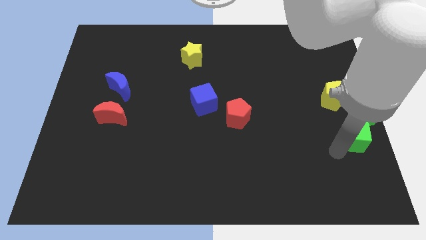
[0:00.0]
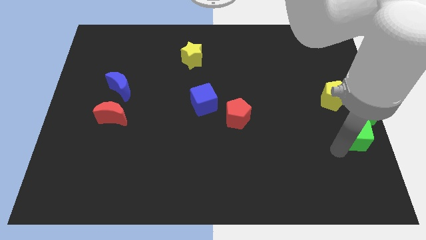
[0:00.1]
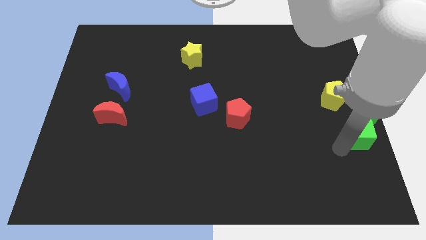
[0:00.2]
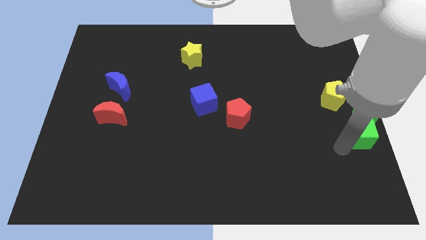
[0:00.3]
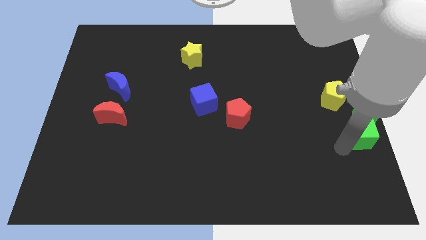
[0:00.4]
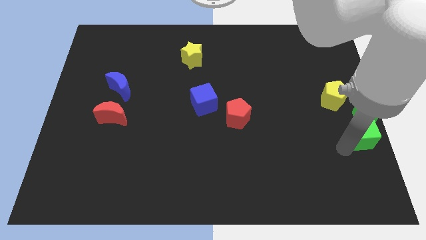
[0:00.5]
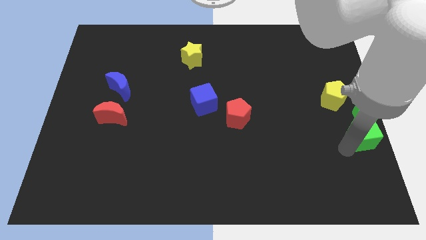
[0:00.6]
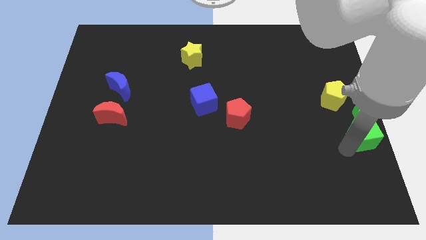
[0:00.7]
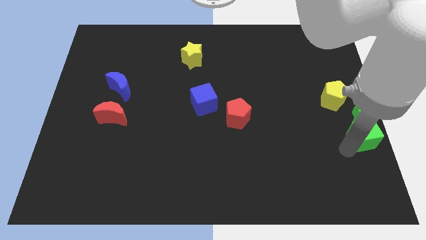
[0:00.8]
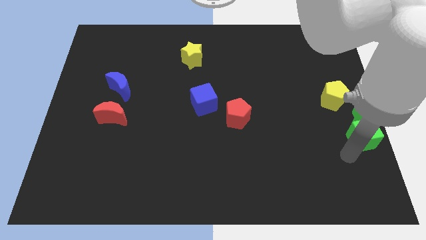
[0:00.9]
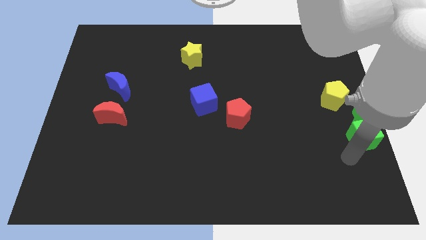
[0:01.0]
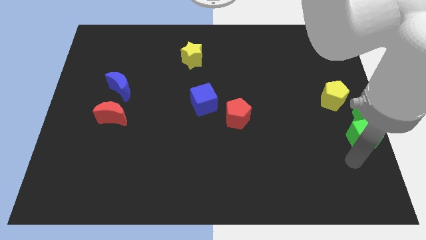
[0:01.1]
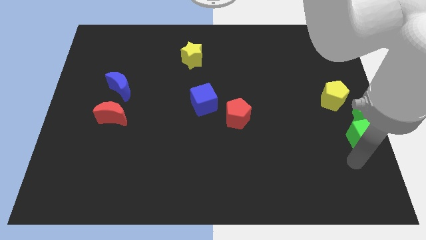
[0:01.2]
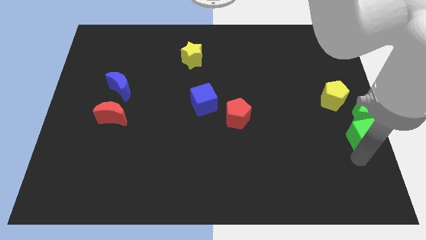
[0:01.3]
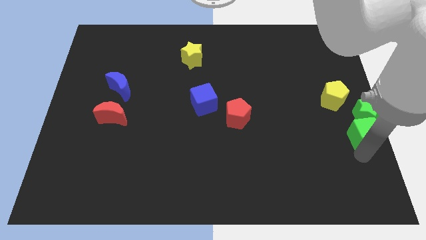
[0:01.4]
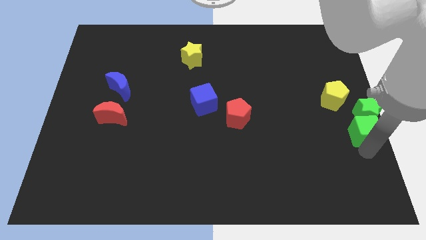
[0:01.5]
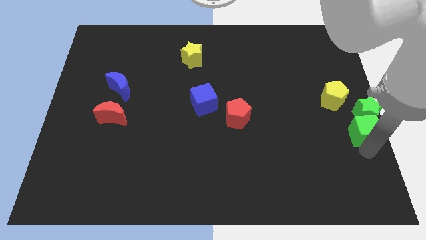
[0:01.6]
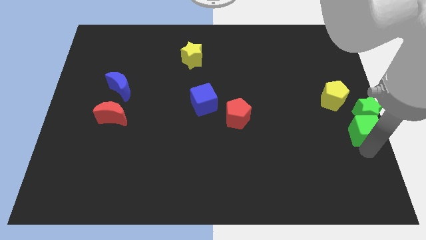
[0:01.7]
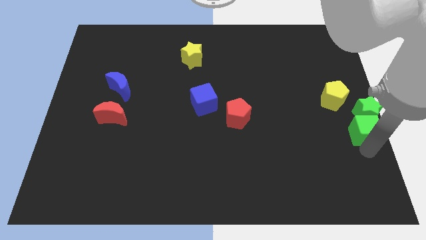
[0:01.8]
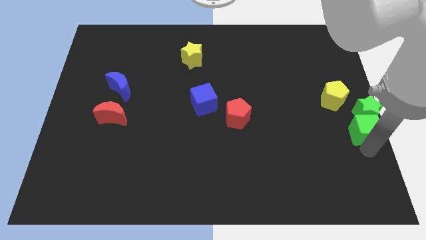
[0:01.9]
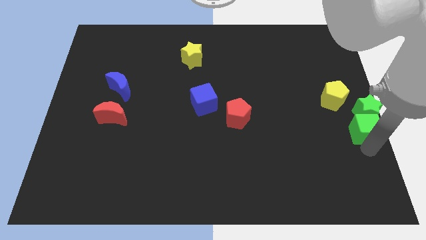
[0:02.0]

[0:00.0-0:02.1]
push the green cube into green star at the bottom

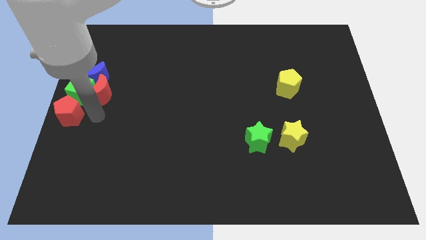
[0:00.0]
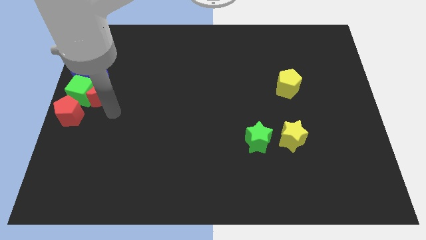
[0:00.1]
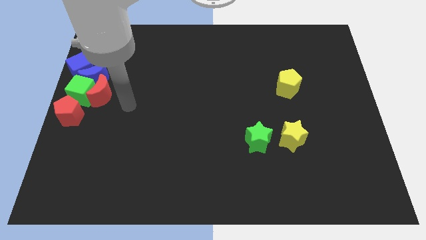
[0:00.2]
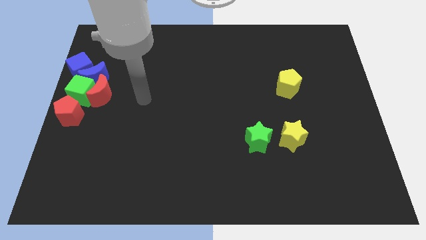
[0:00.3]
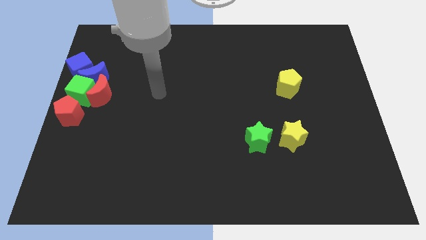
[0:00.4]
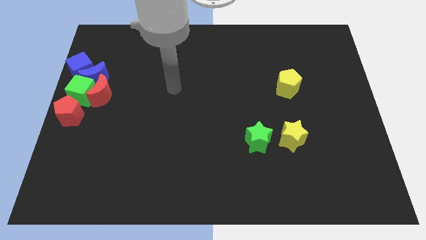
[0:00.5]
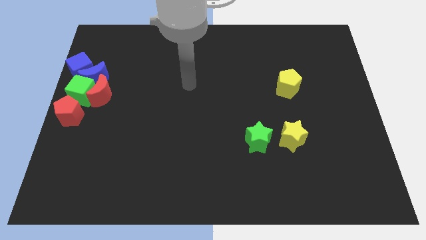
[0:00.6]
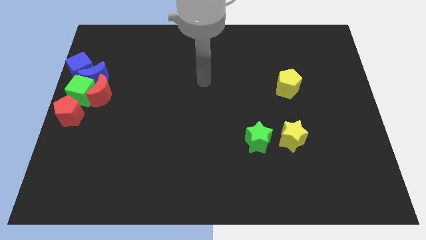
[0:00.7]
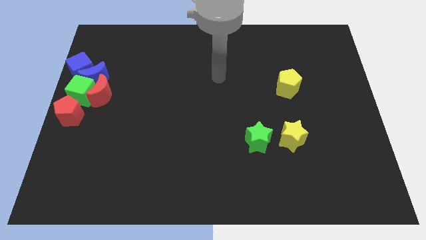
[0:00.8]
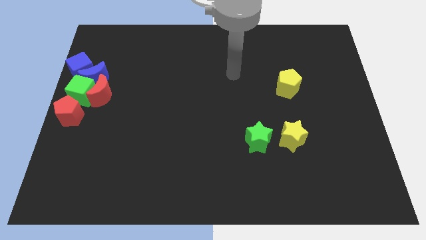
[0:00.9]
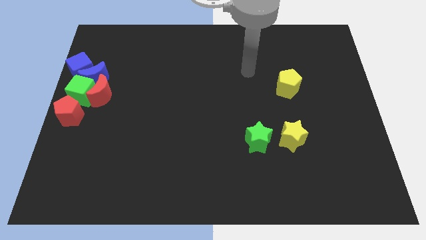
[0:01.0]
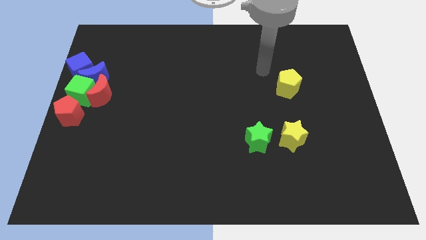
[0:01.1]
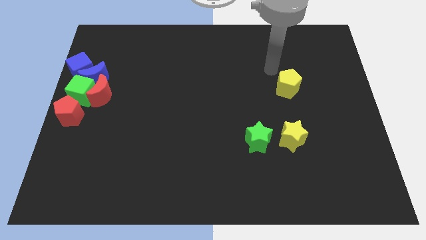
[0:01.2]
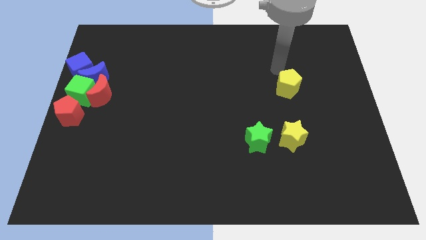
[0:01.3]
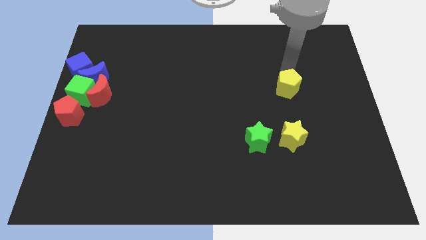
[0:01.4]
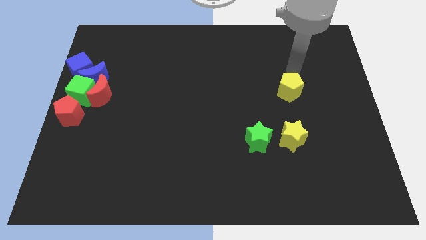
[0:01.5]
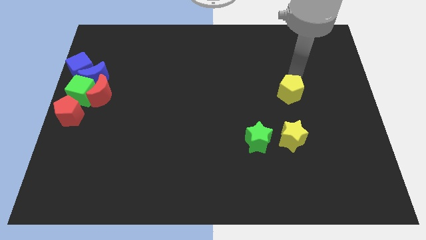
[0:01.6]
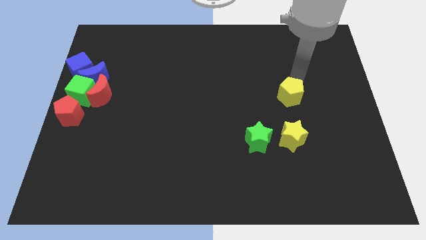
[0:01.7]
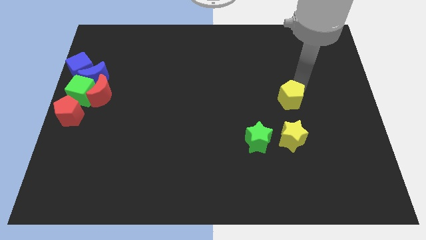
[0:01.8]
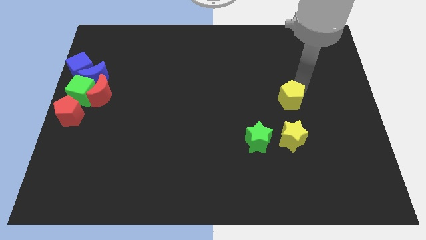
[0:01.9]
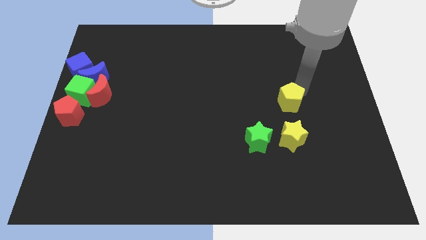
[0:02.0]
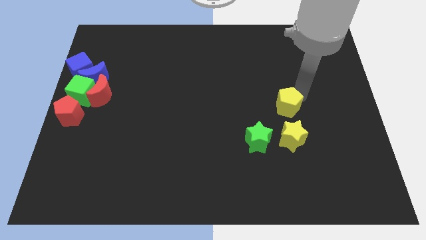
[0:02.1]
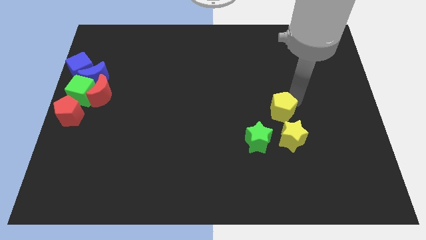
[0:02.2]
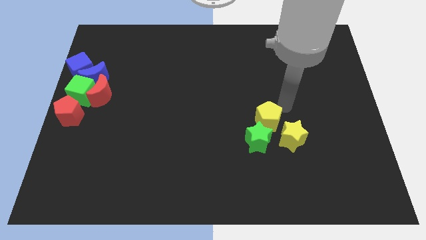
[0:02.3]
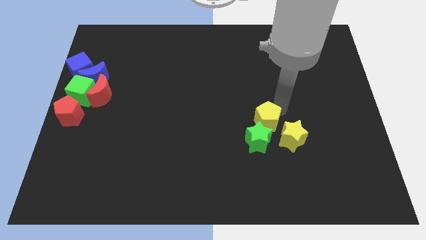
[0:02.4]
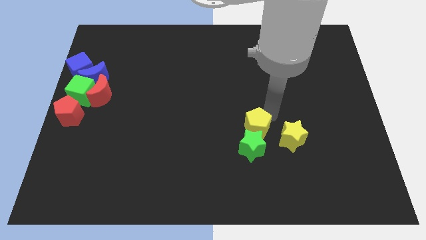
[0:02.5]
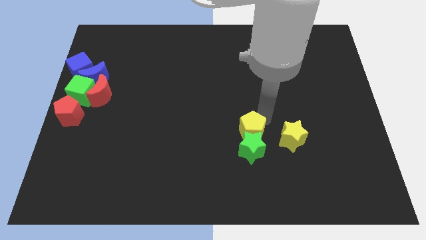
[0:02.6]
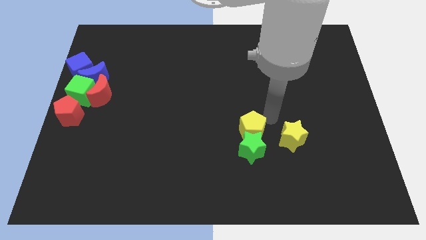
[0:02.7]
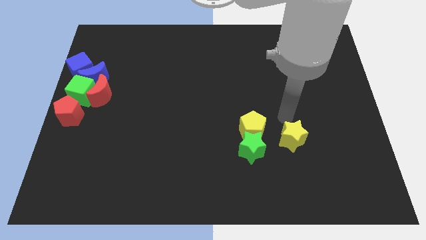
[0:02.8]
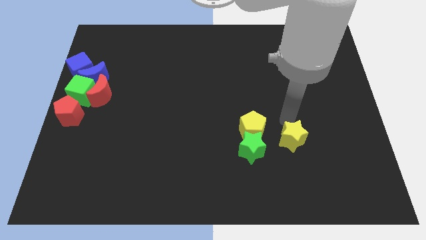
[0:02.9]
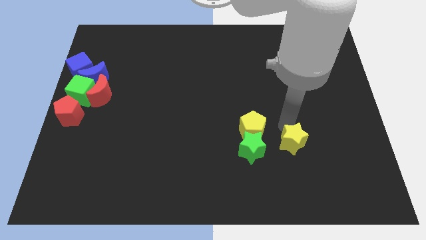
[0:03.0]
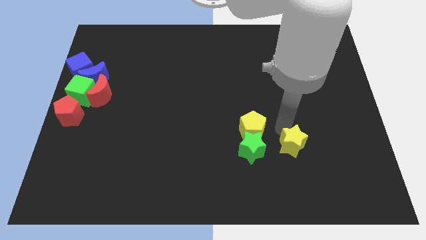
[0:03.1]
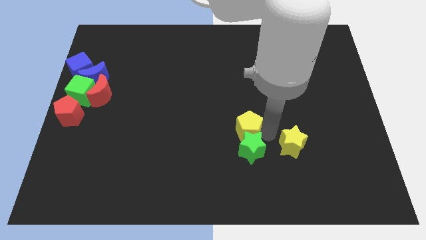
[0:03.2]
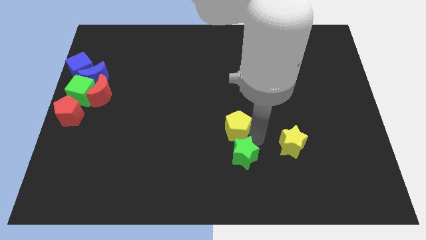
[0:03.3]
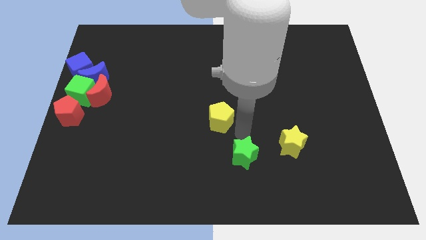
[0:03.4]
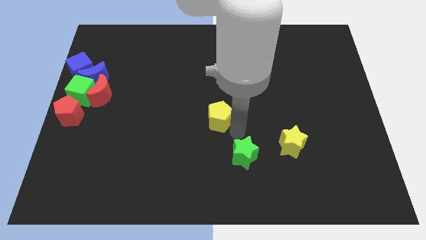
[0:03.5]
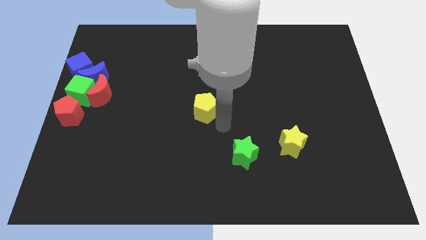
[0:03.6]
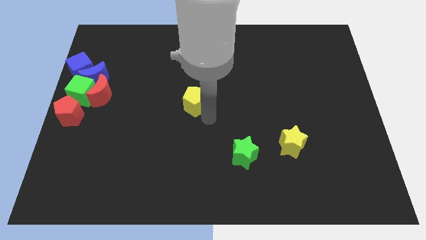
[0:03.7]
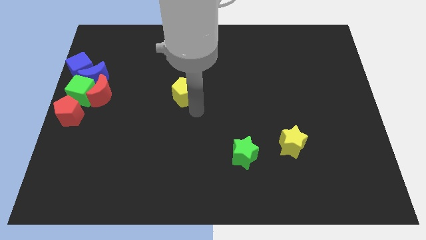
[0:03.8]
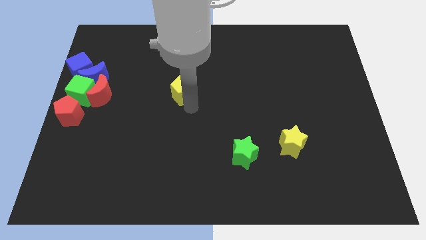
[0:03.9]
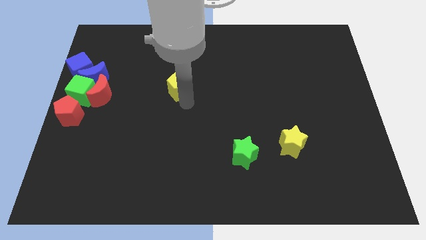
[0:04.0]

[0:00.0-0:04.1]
push the yellow pentagon towards the red crescent

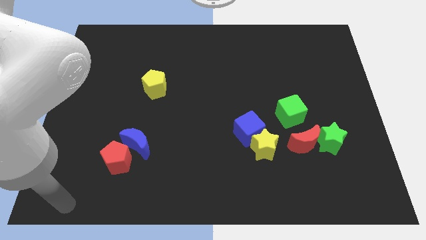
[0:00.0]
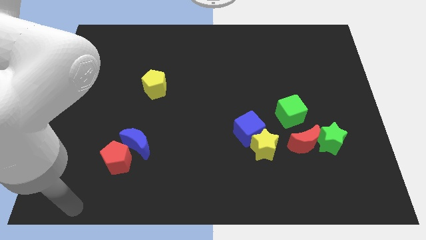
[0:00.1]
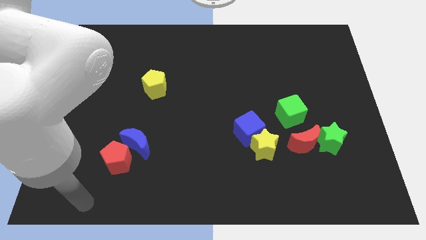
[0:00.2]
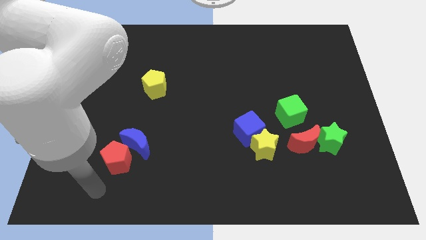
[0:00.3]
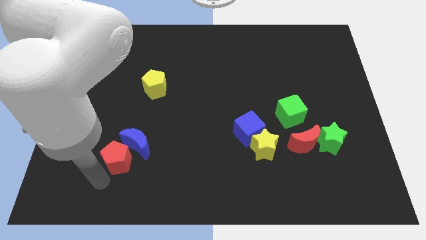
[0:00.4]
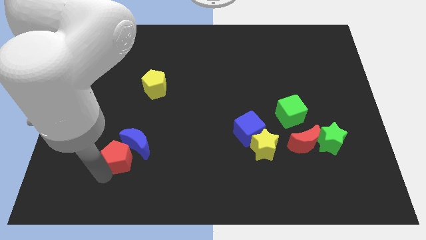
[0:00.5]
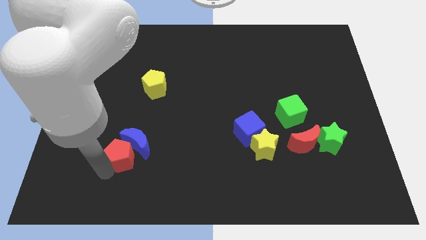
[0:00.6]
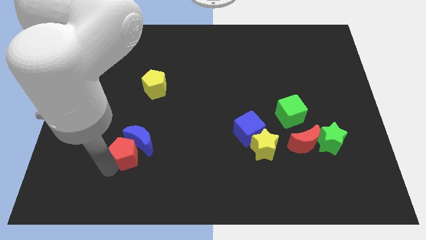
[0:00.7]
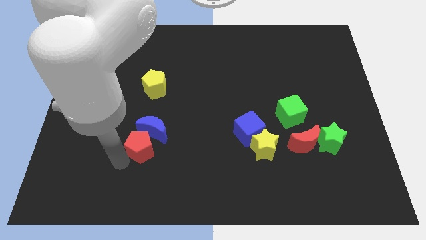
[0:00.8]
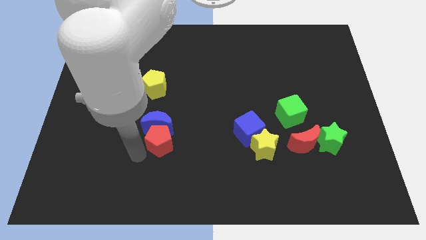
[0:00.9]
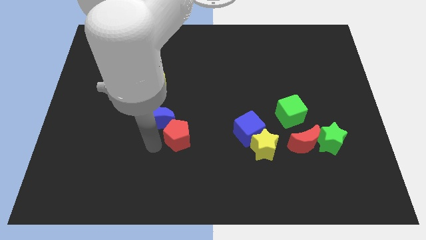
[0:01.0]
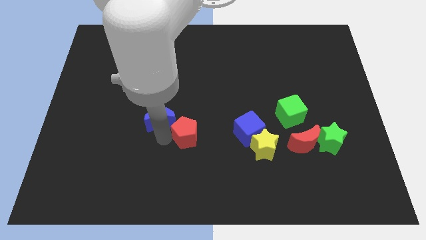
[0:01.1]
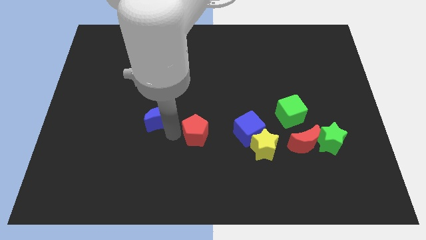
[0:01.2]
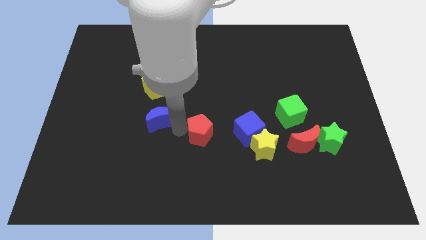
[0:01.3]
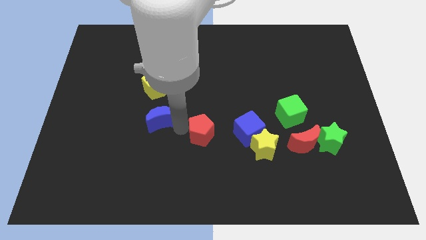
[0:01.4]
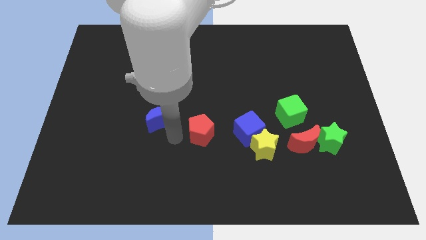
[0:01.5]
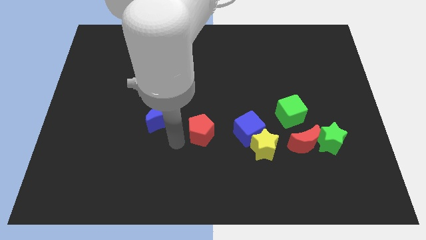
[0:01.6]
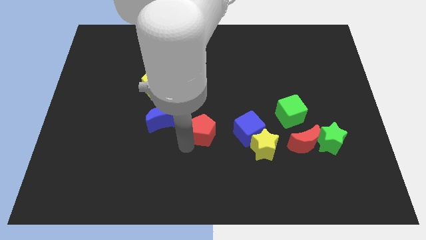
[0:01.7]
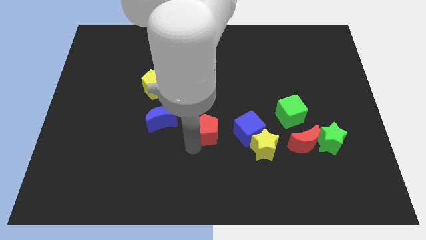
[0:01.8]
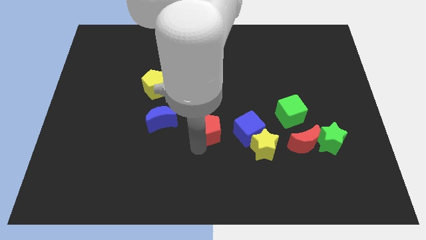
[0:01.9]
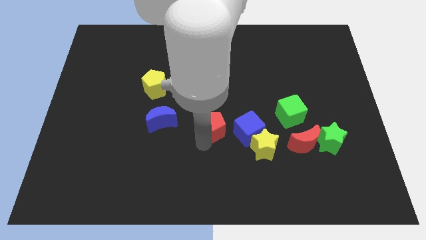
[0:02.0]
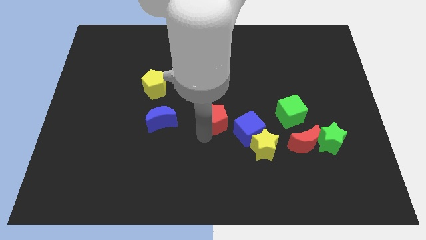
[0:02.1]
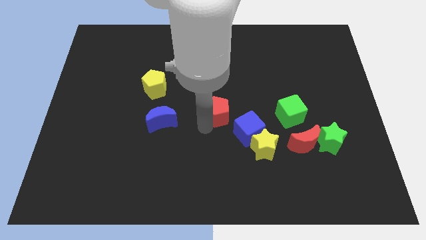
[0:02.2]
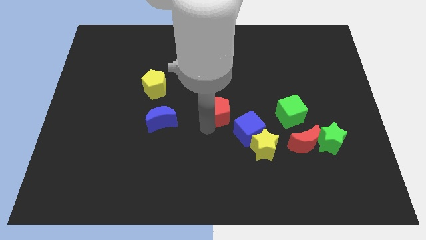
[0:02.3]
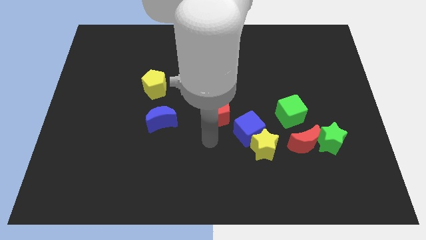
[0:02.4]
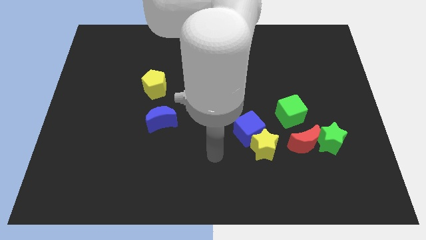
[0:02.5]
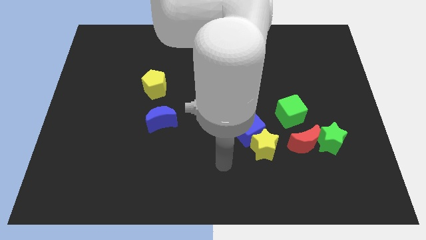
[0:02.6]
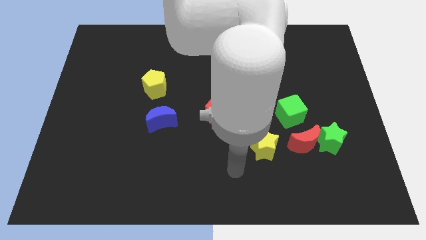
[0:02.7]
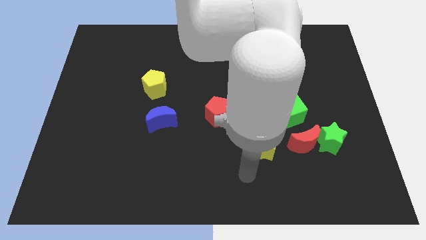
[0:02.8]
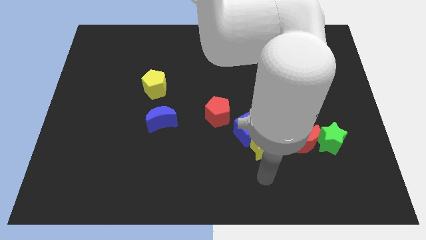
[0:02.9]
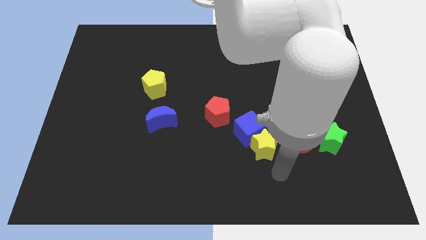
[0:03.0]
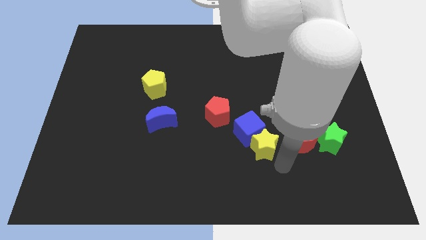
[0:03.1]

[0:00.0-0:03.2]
separate red pentagon and the blue moon
